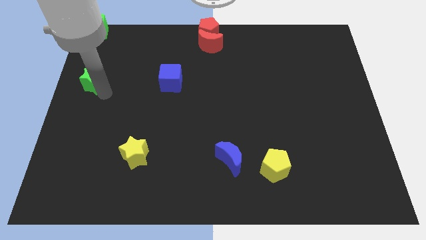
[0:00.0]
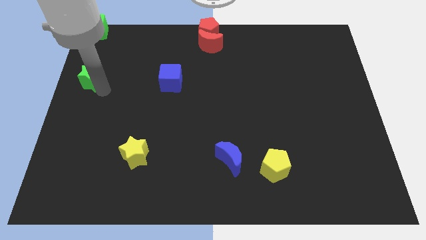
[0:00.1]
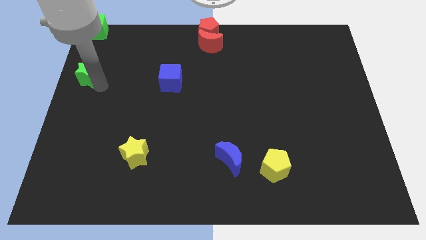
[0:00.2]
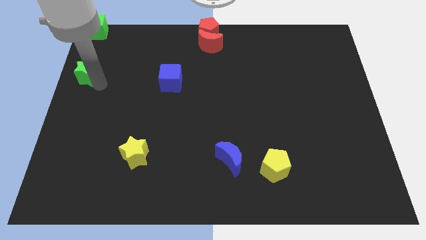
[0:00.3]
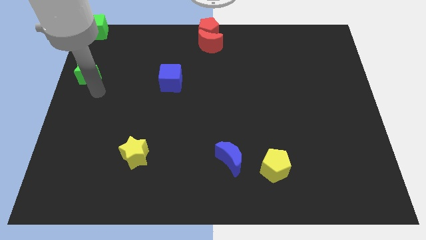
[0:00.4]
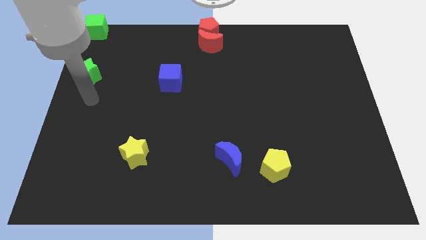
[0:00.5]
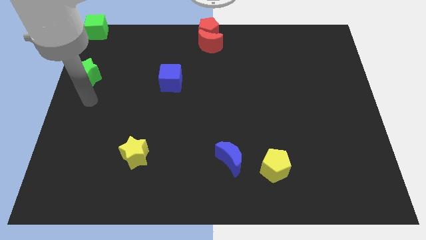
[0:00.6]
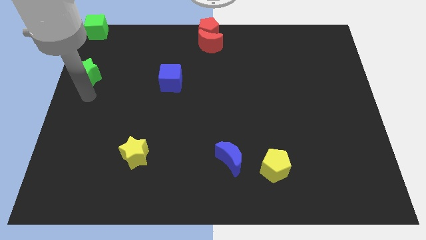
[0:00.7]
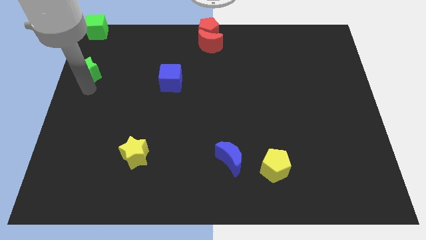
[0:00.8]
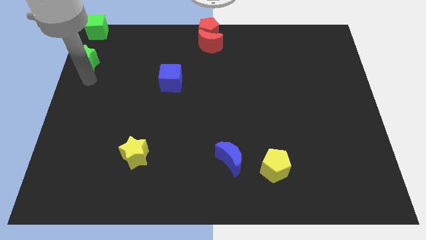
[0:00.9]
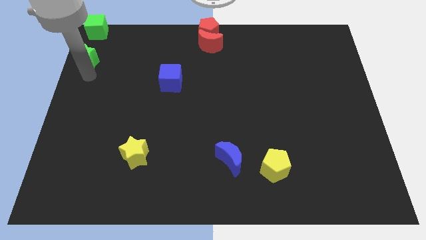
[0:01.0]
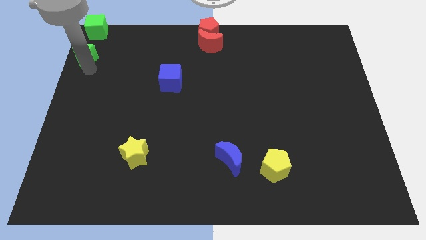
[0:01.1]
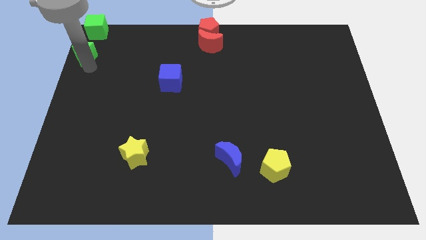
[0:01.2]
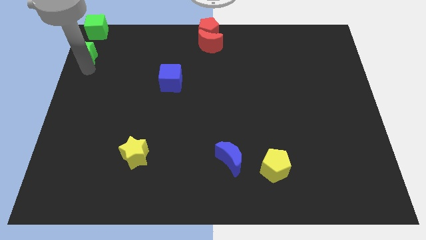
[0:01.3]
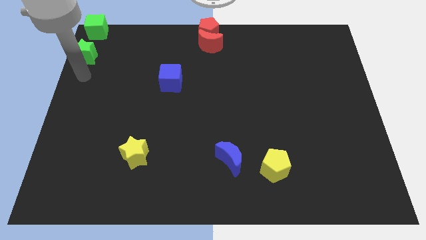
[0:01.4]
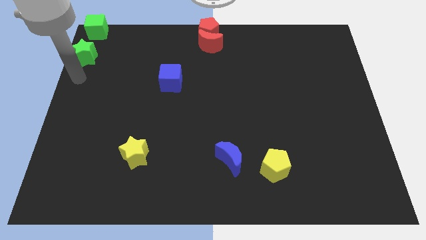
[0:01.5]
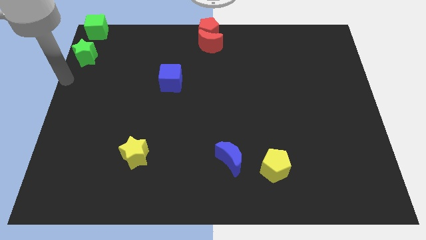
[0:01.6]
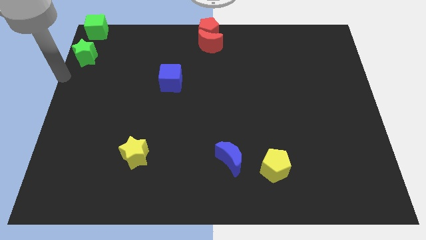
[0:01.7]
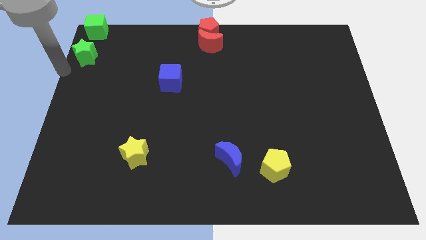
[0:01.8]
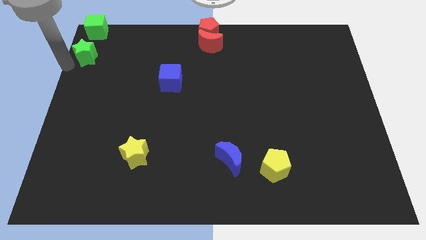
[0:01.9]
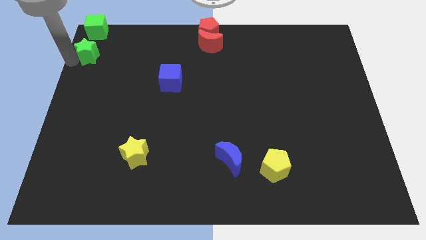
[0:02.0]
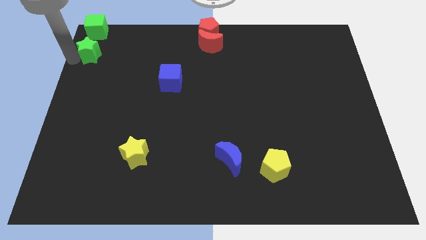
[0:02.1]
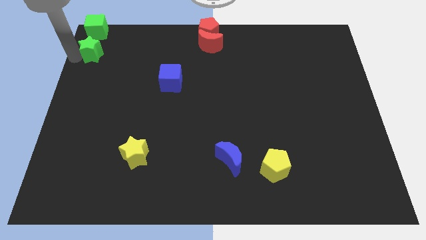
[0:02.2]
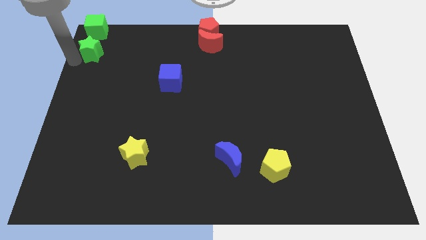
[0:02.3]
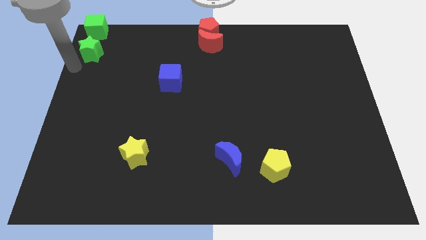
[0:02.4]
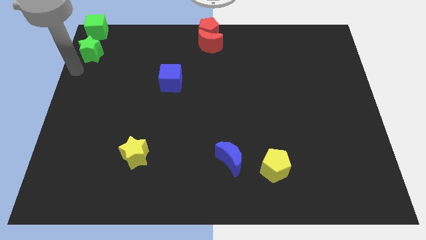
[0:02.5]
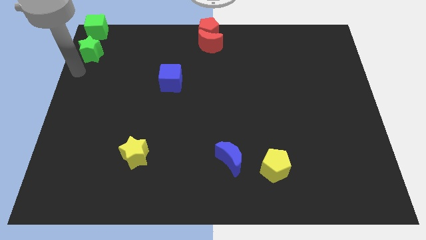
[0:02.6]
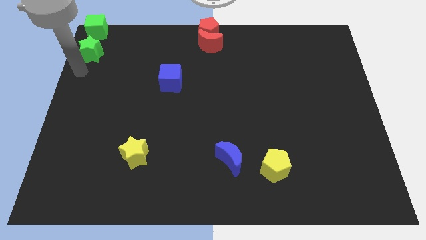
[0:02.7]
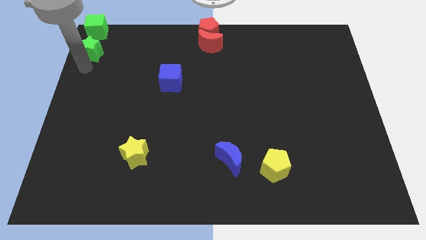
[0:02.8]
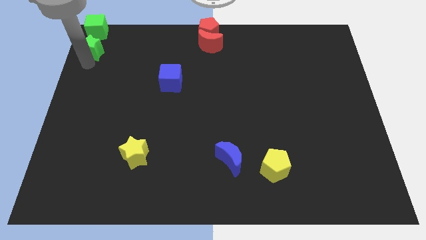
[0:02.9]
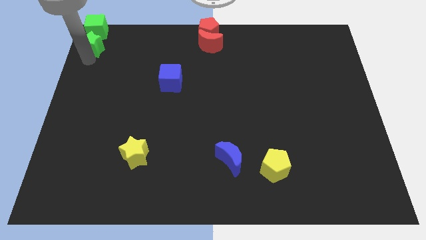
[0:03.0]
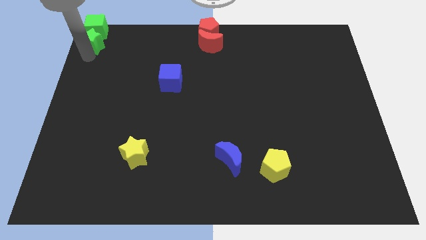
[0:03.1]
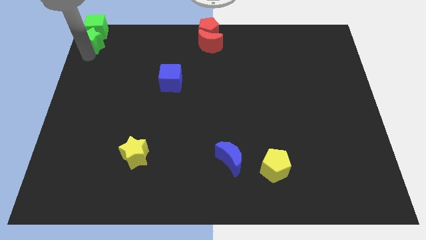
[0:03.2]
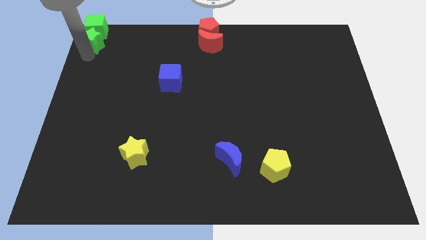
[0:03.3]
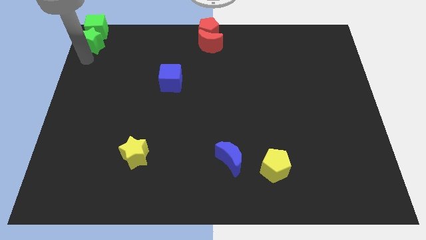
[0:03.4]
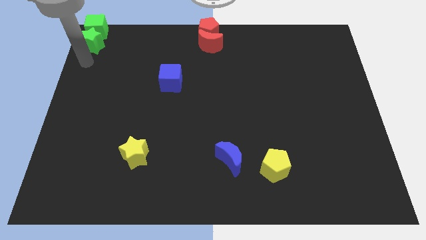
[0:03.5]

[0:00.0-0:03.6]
push green star into green cube

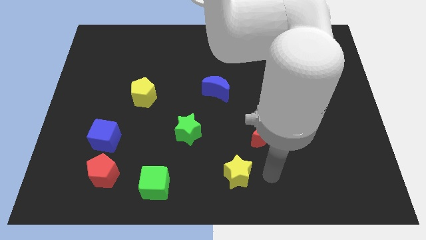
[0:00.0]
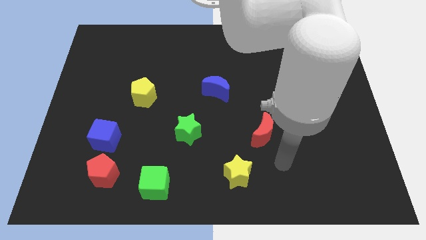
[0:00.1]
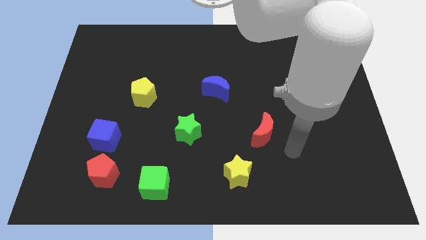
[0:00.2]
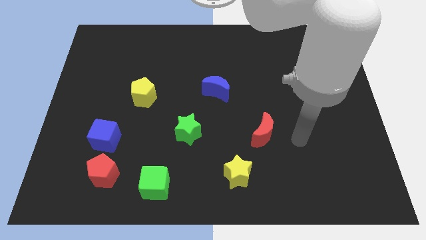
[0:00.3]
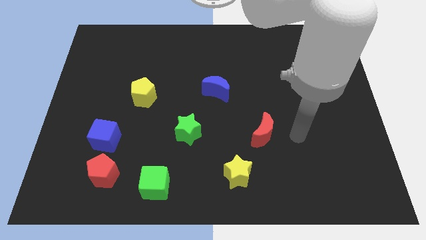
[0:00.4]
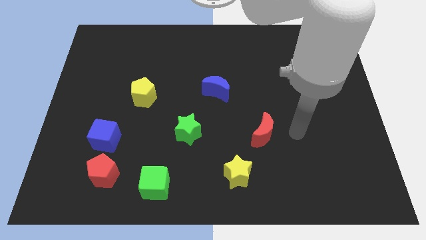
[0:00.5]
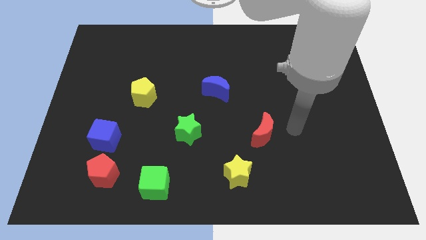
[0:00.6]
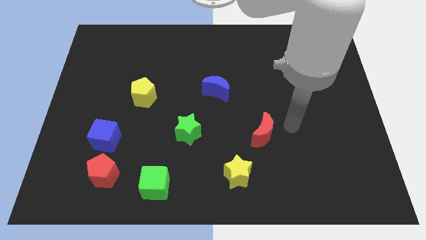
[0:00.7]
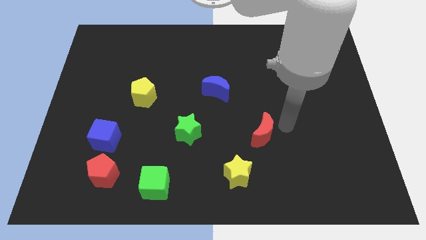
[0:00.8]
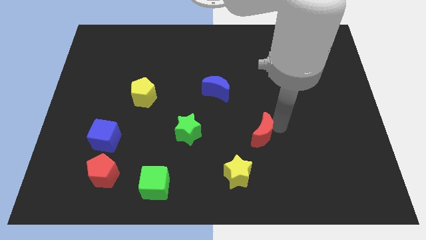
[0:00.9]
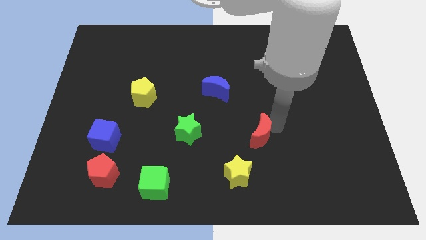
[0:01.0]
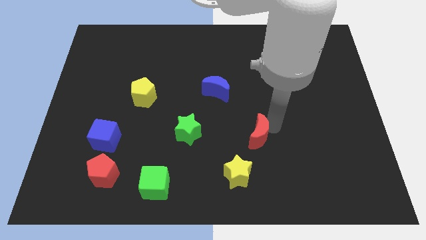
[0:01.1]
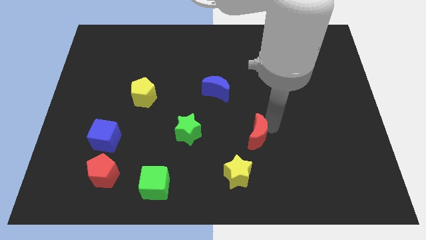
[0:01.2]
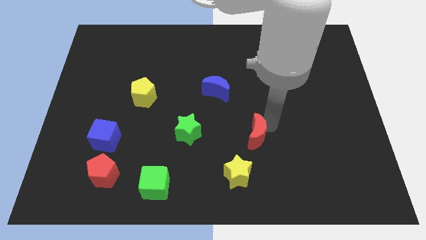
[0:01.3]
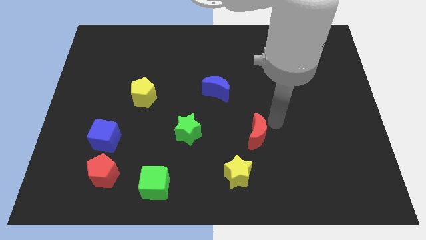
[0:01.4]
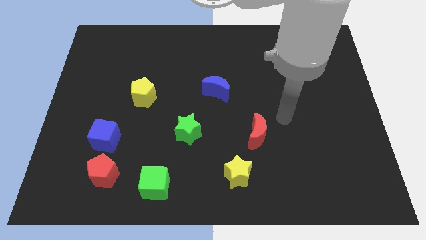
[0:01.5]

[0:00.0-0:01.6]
slide the red moon to the right side of the green star

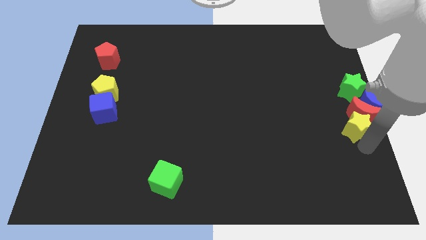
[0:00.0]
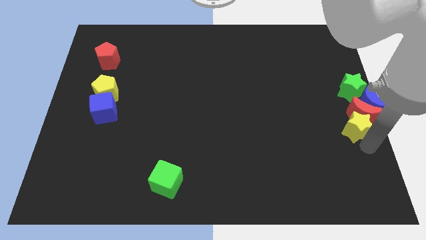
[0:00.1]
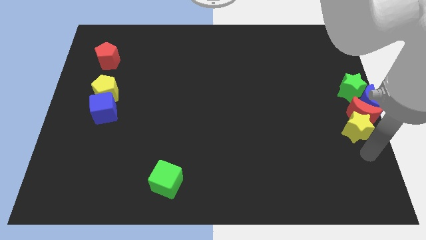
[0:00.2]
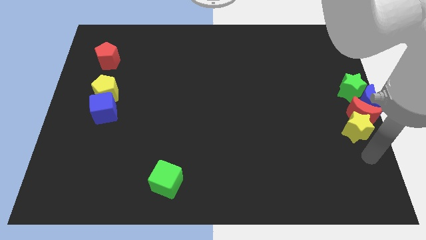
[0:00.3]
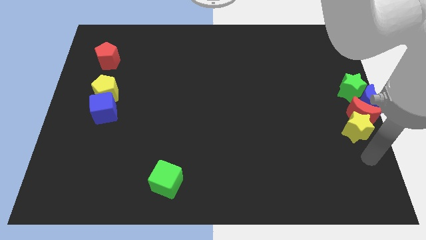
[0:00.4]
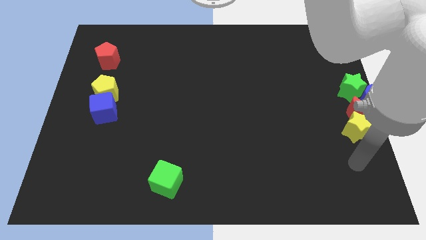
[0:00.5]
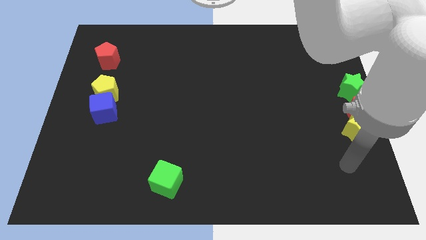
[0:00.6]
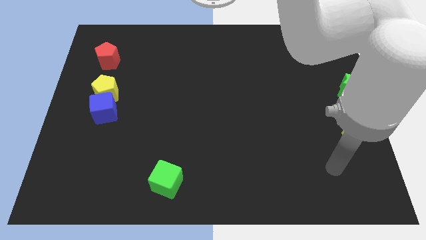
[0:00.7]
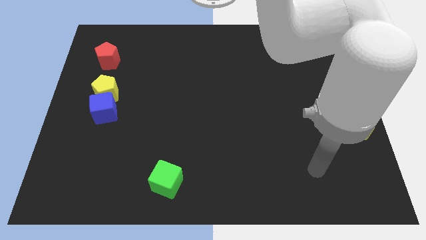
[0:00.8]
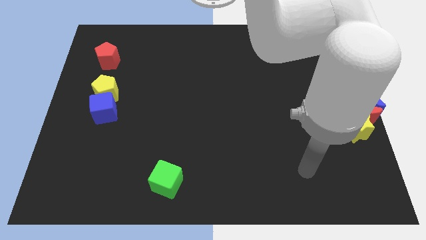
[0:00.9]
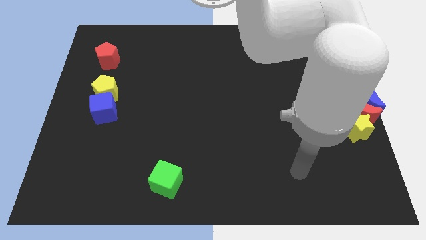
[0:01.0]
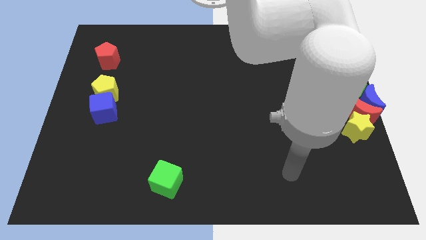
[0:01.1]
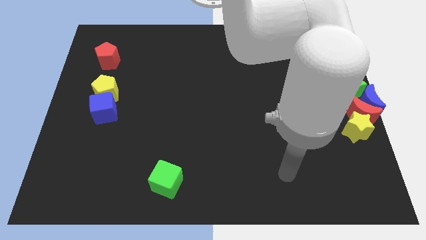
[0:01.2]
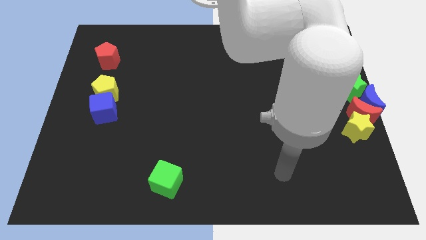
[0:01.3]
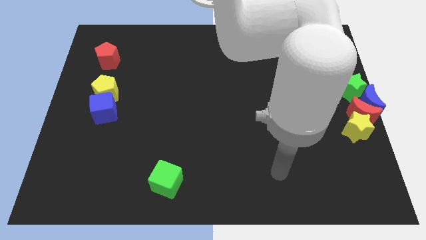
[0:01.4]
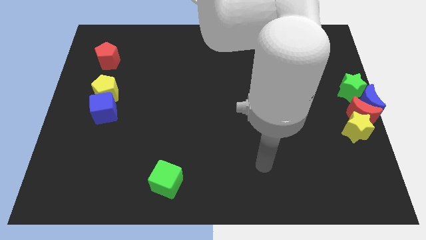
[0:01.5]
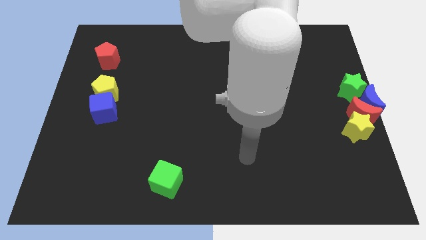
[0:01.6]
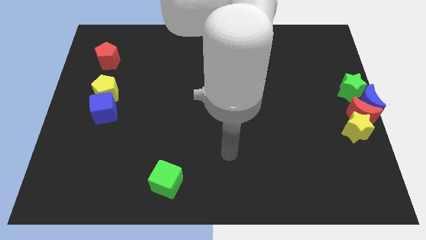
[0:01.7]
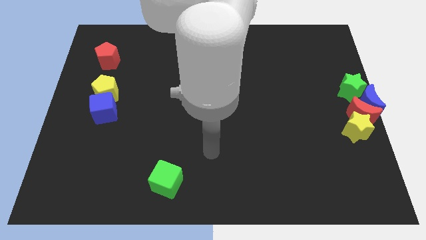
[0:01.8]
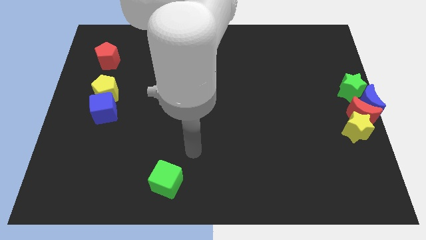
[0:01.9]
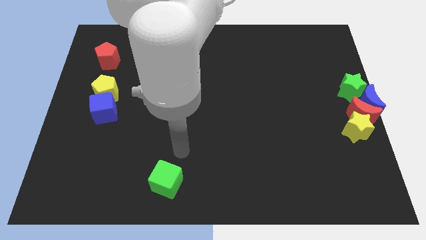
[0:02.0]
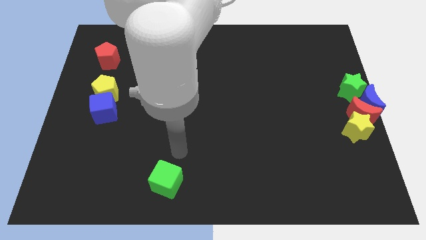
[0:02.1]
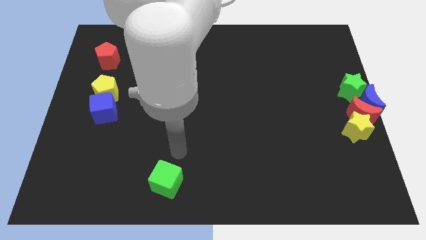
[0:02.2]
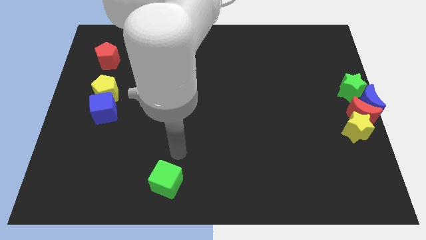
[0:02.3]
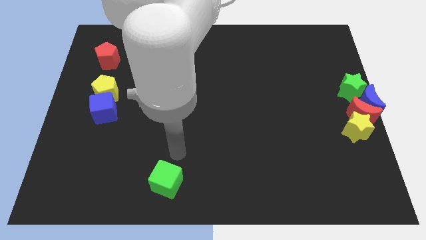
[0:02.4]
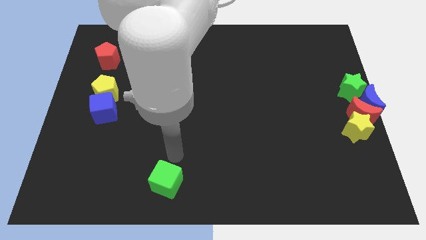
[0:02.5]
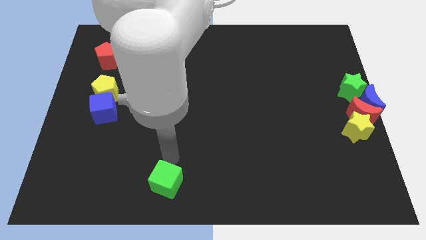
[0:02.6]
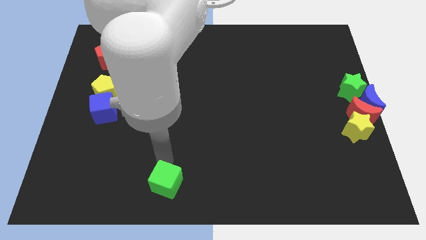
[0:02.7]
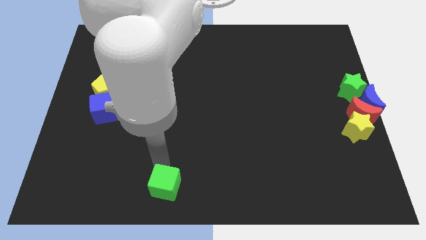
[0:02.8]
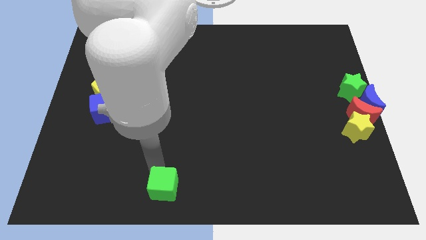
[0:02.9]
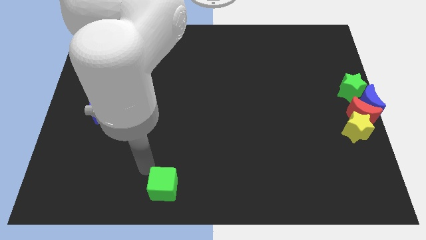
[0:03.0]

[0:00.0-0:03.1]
move the arm to the top left to the green cube

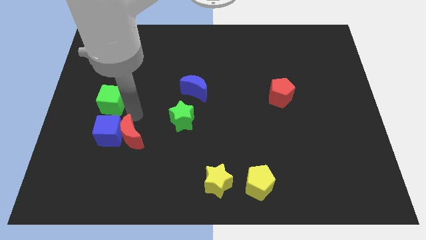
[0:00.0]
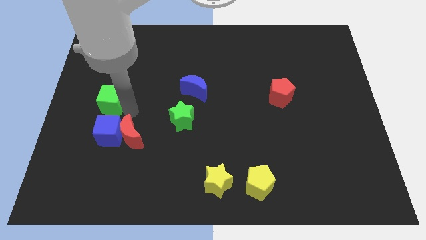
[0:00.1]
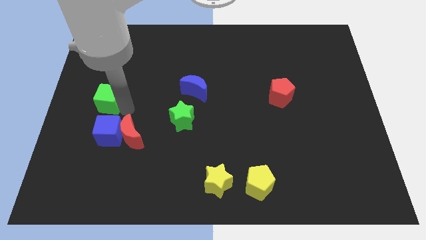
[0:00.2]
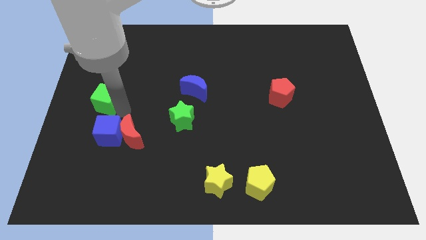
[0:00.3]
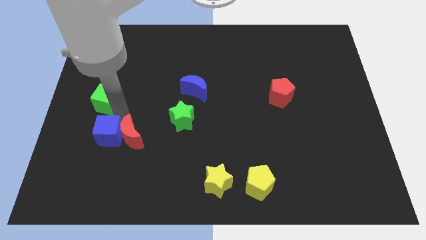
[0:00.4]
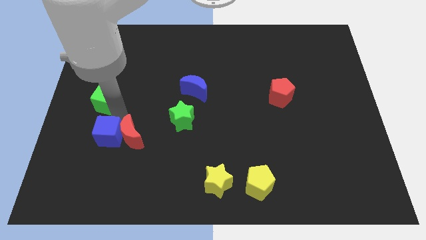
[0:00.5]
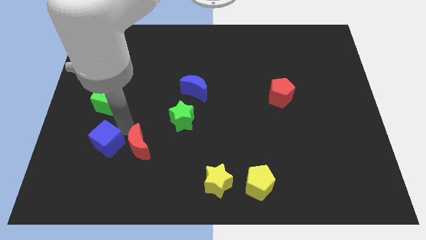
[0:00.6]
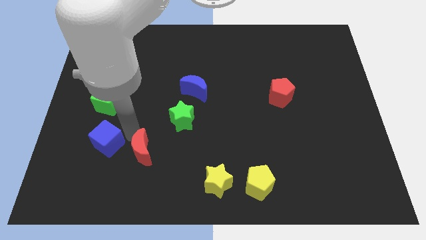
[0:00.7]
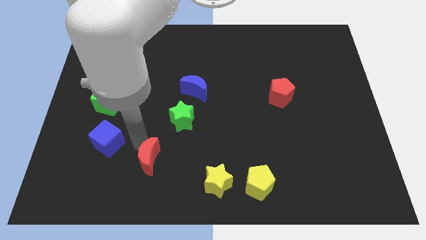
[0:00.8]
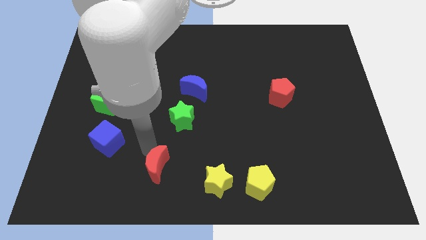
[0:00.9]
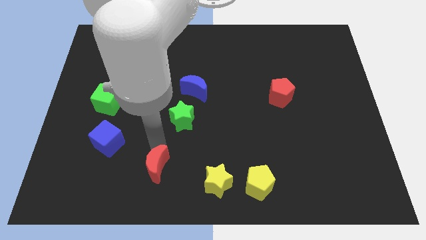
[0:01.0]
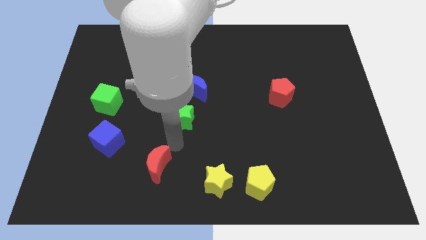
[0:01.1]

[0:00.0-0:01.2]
separate the red crescent and blue cube
